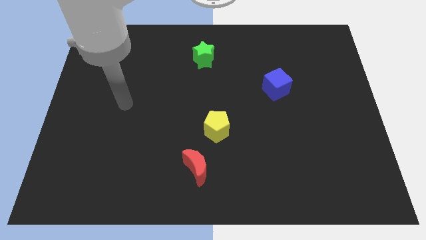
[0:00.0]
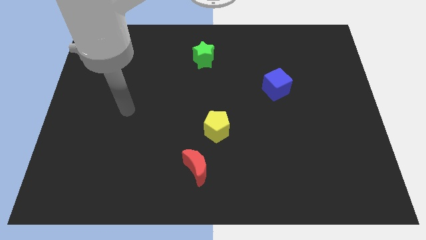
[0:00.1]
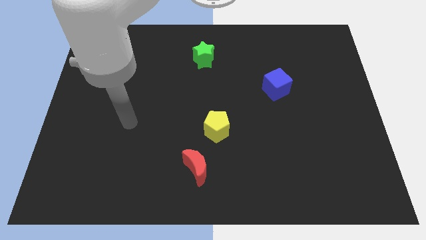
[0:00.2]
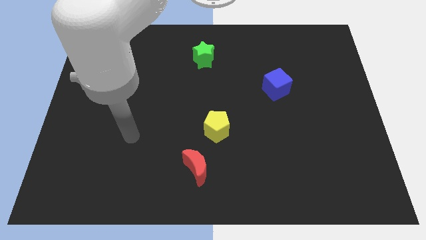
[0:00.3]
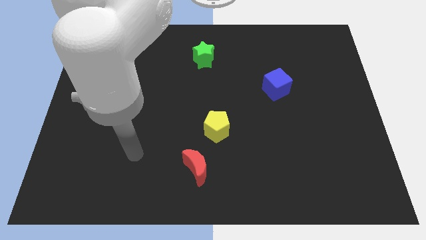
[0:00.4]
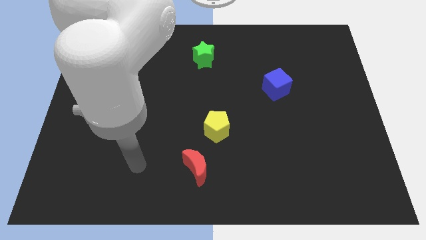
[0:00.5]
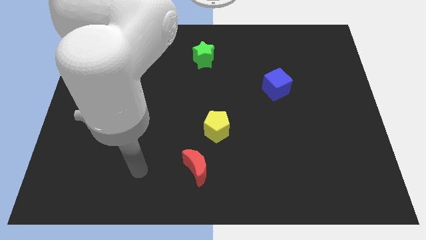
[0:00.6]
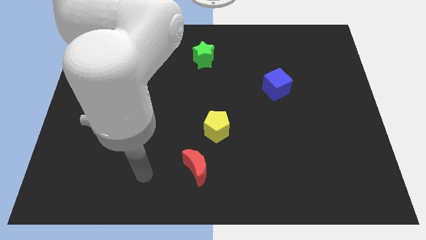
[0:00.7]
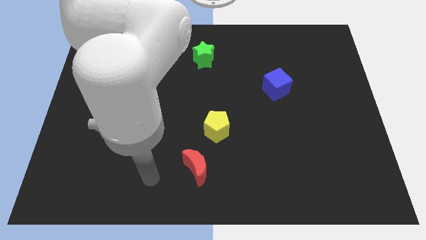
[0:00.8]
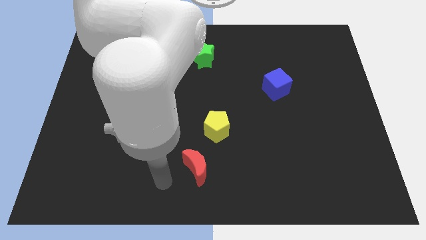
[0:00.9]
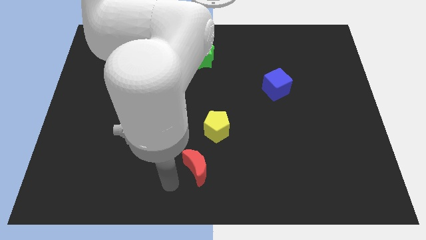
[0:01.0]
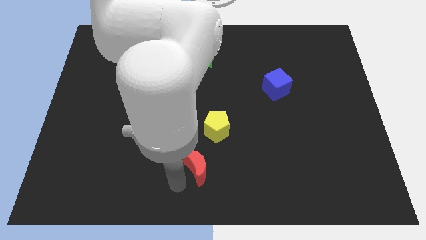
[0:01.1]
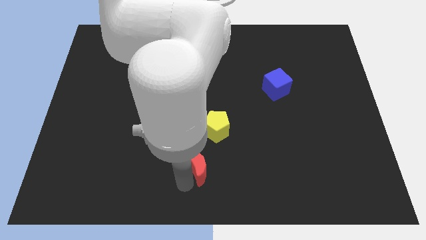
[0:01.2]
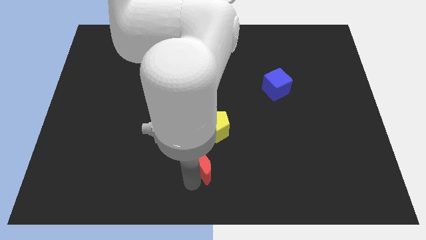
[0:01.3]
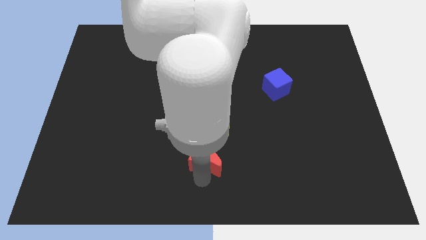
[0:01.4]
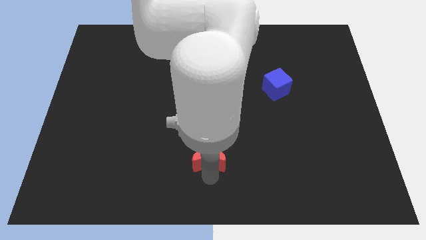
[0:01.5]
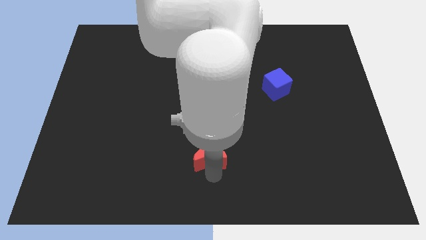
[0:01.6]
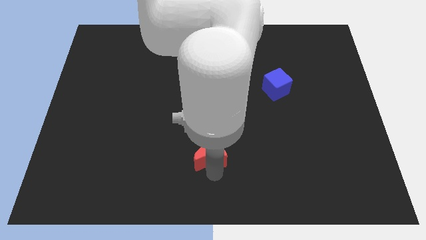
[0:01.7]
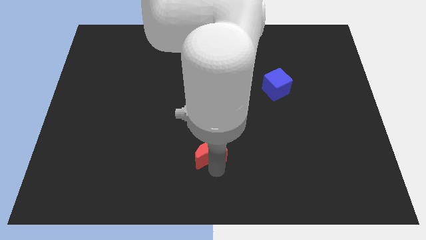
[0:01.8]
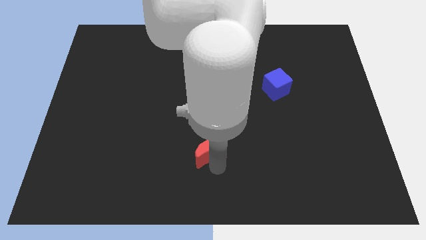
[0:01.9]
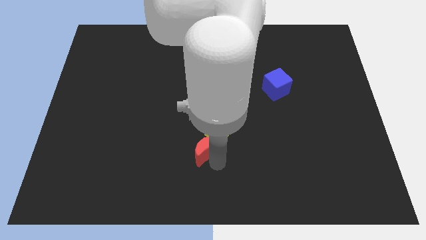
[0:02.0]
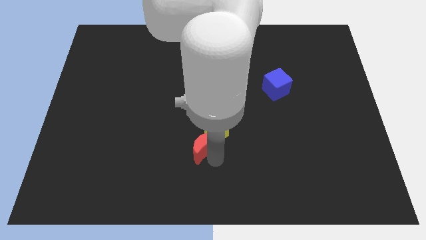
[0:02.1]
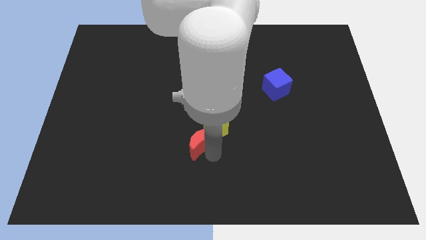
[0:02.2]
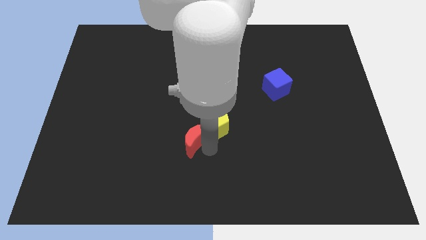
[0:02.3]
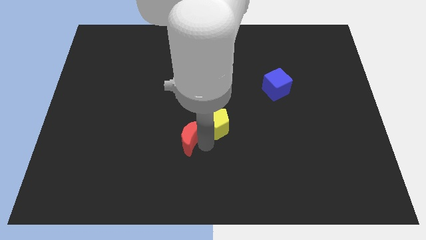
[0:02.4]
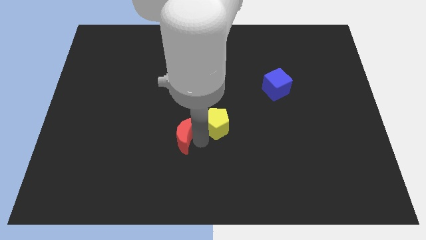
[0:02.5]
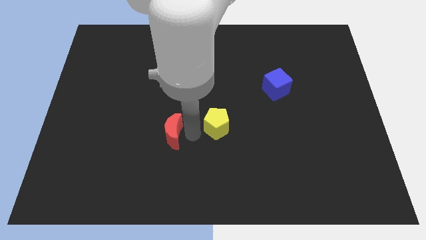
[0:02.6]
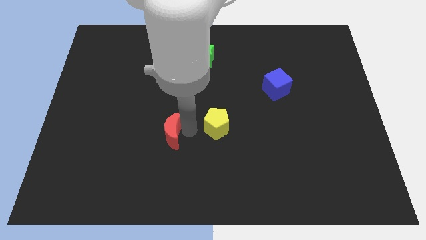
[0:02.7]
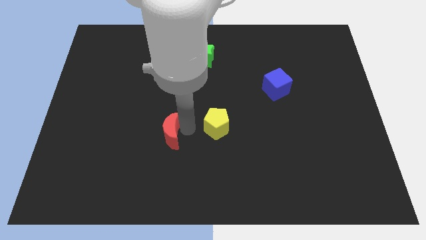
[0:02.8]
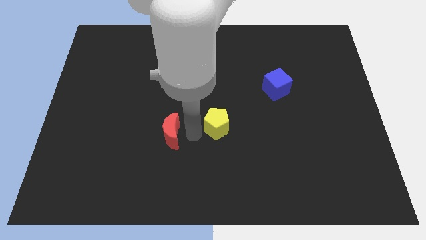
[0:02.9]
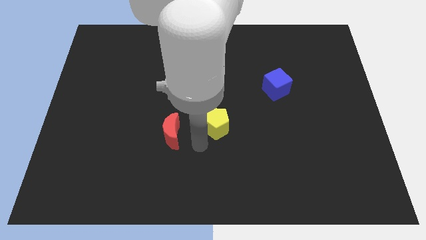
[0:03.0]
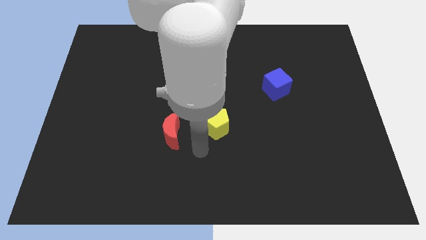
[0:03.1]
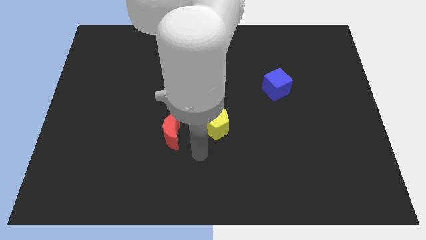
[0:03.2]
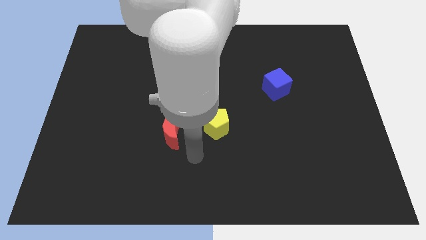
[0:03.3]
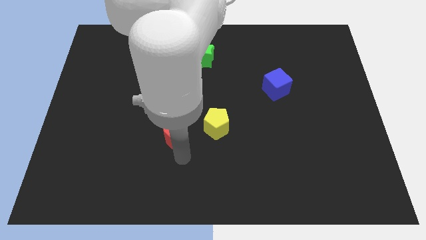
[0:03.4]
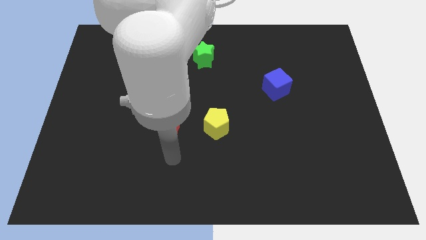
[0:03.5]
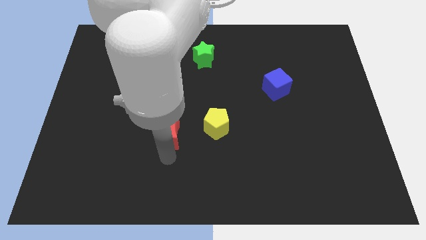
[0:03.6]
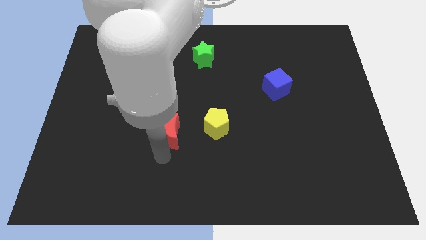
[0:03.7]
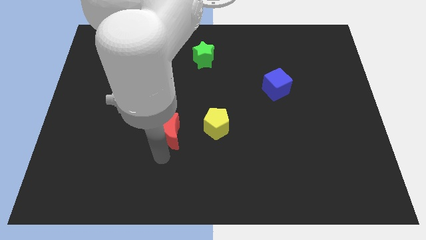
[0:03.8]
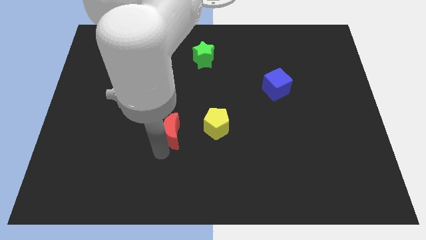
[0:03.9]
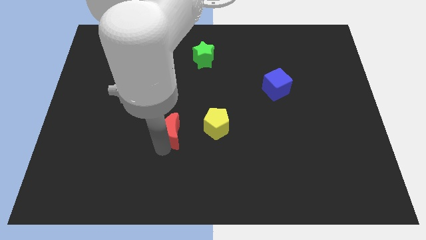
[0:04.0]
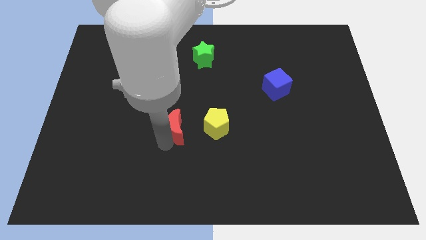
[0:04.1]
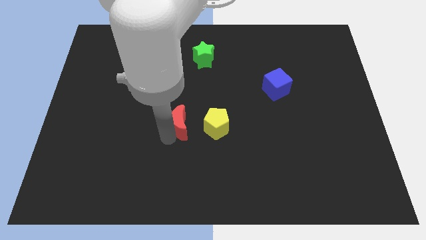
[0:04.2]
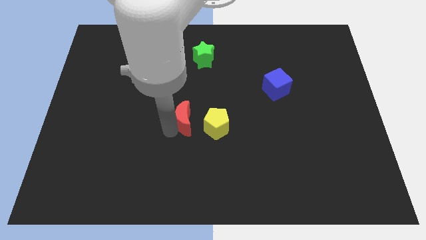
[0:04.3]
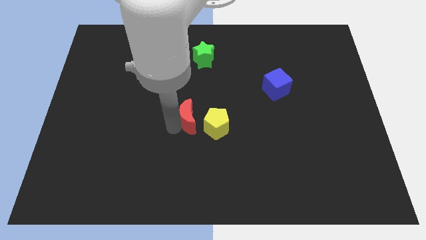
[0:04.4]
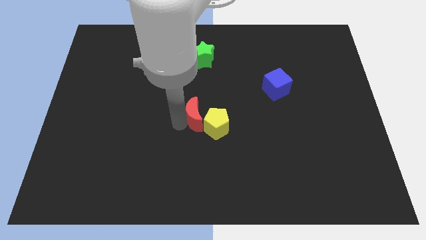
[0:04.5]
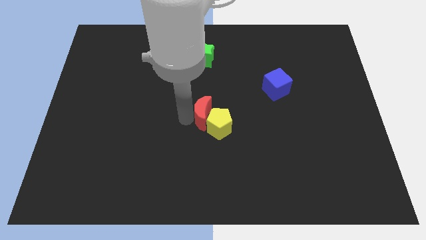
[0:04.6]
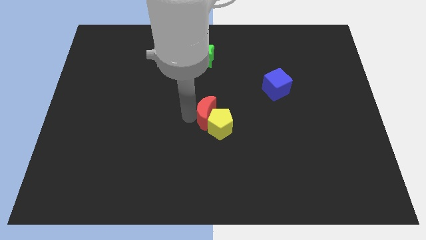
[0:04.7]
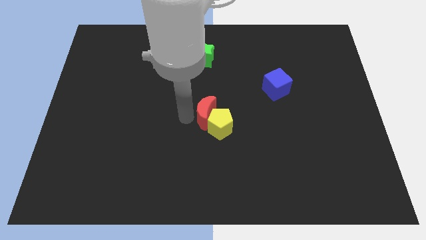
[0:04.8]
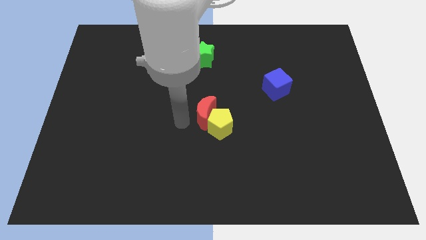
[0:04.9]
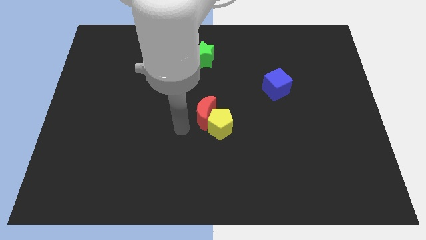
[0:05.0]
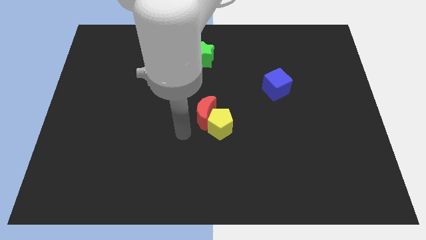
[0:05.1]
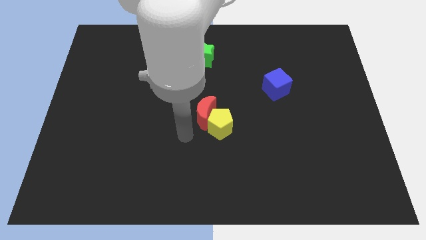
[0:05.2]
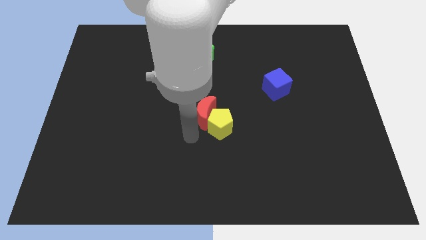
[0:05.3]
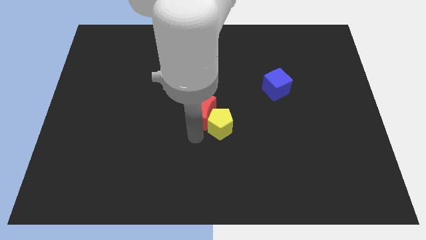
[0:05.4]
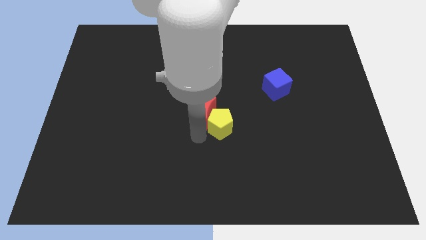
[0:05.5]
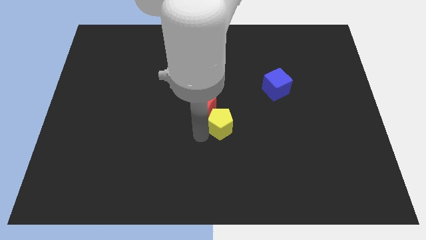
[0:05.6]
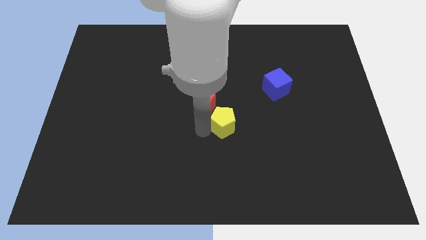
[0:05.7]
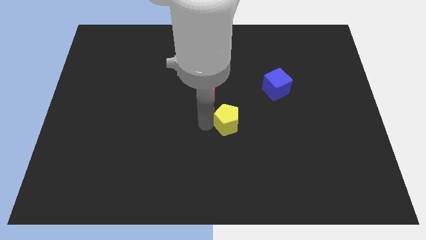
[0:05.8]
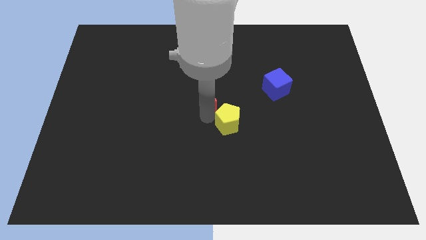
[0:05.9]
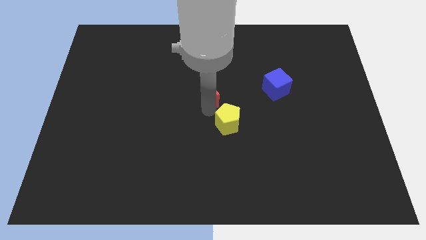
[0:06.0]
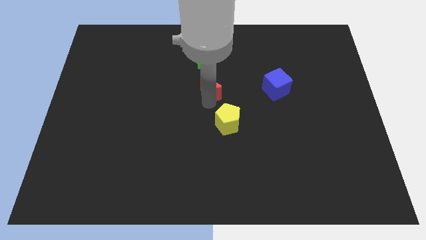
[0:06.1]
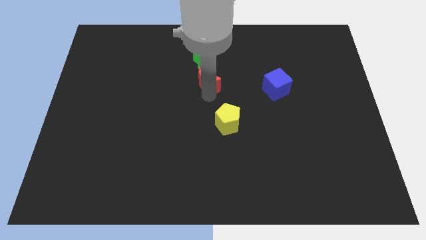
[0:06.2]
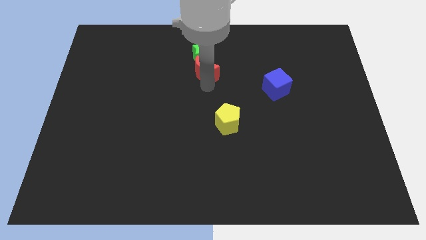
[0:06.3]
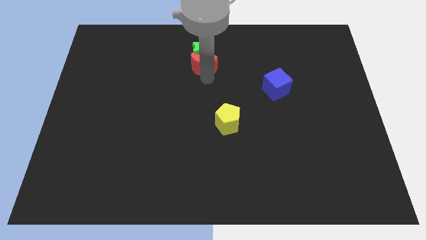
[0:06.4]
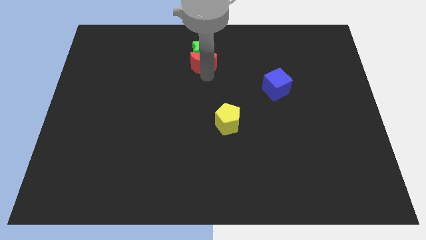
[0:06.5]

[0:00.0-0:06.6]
slide the moon to the green star

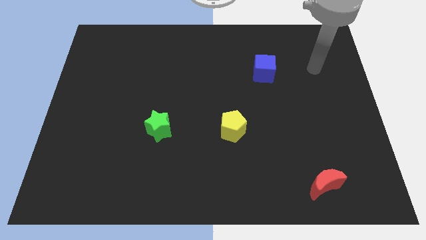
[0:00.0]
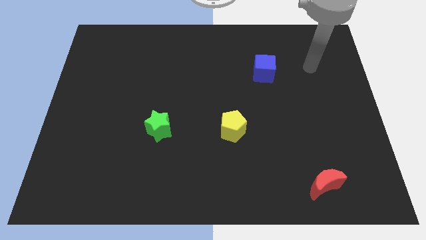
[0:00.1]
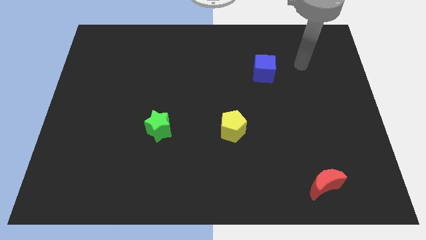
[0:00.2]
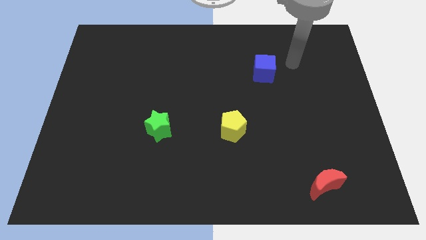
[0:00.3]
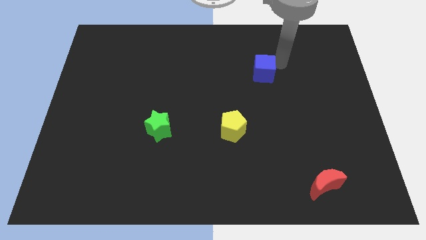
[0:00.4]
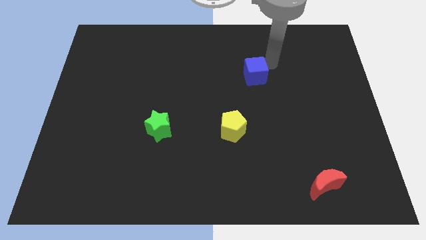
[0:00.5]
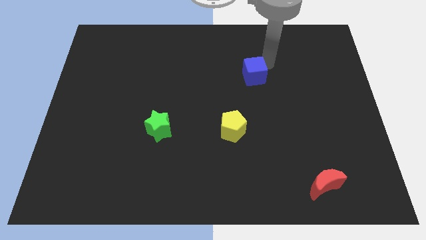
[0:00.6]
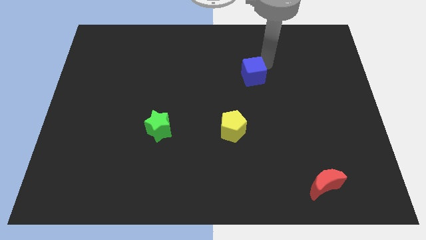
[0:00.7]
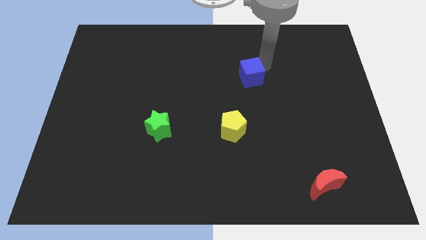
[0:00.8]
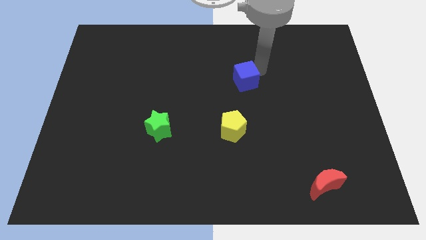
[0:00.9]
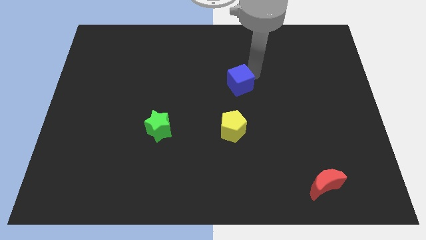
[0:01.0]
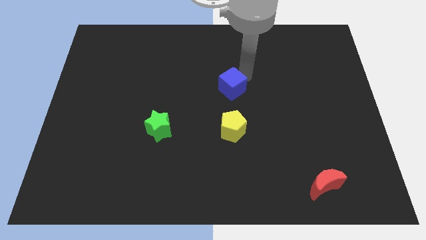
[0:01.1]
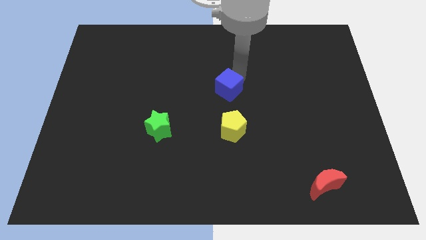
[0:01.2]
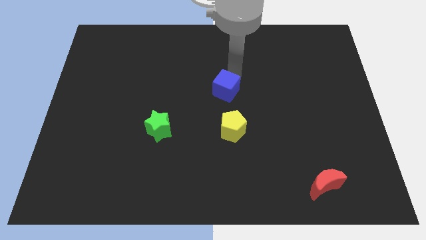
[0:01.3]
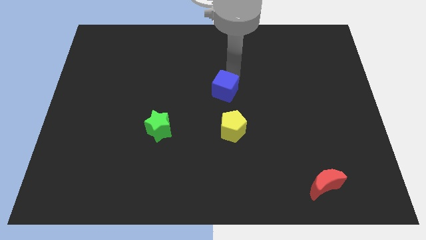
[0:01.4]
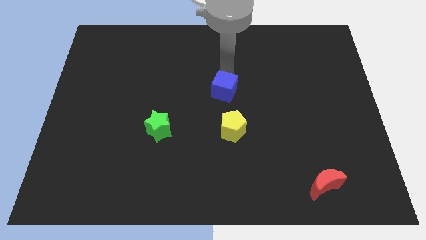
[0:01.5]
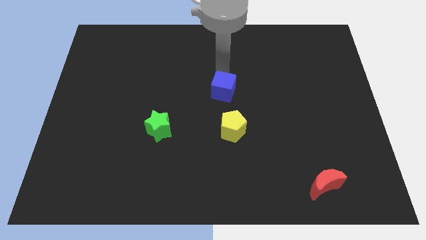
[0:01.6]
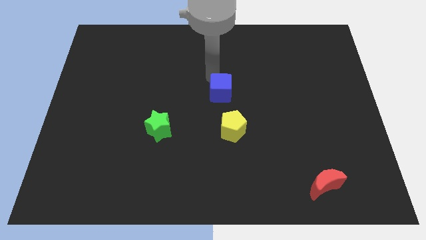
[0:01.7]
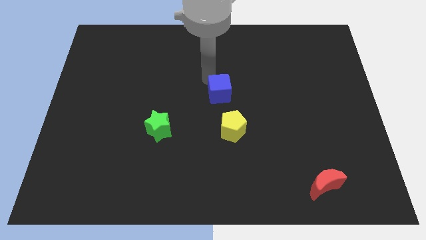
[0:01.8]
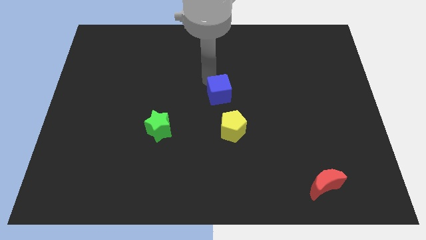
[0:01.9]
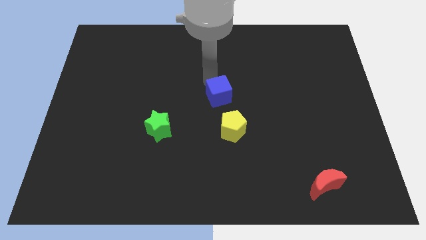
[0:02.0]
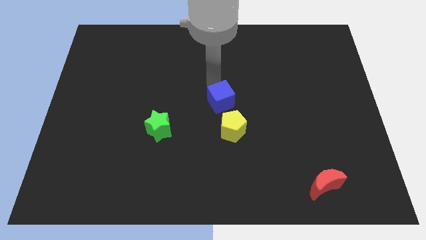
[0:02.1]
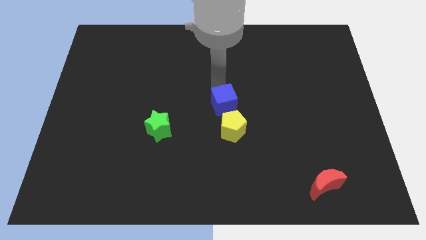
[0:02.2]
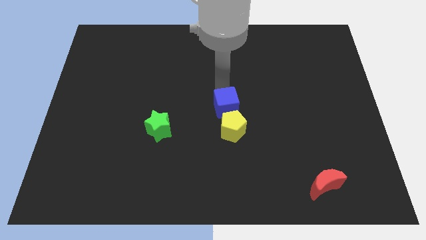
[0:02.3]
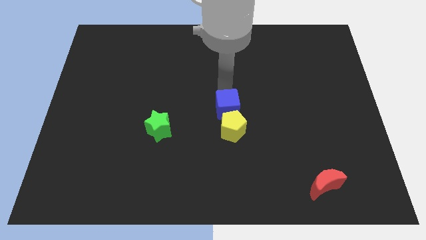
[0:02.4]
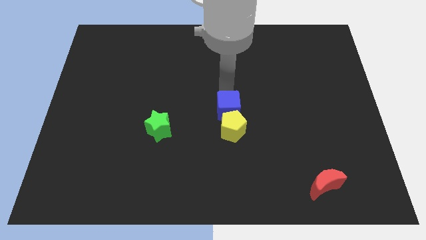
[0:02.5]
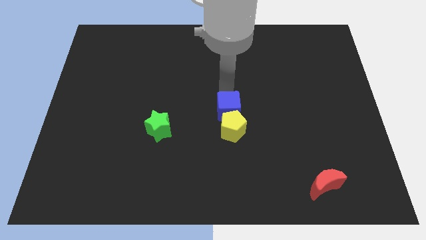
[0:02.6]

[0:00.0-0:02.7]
slide the blue block to the yellow block
